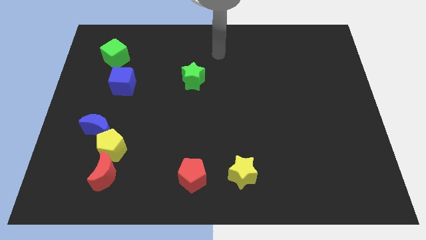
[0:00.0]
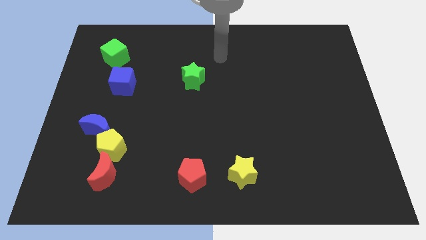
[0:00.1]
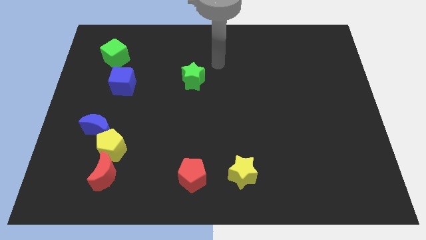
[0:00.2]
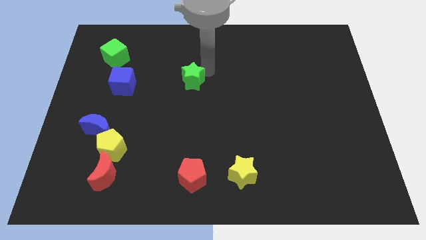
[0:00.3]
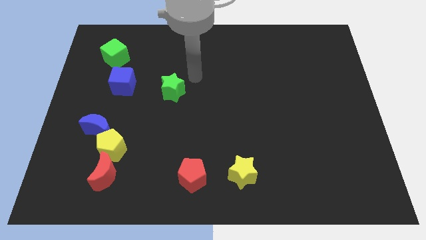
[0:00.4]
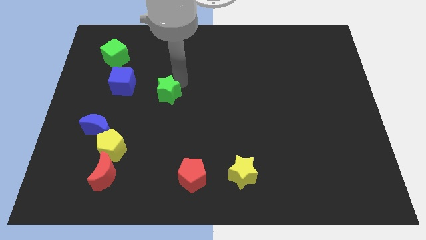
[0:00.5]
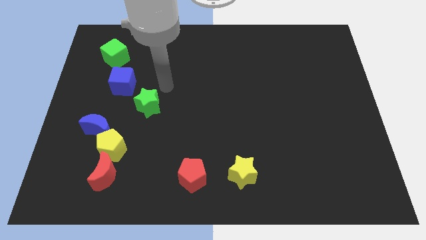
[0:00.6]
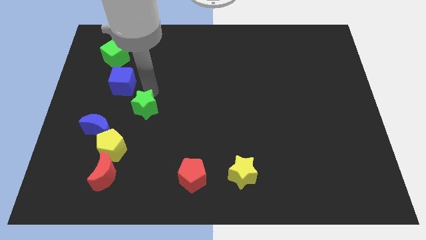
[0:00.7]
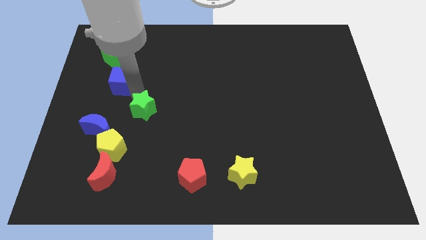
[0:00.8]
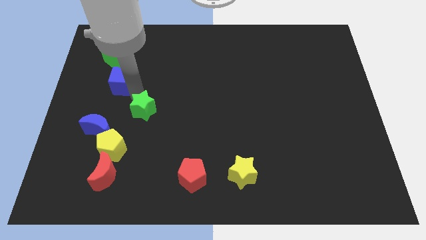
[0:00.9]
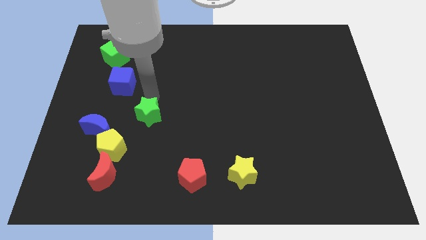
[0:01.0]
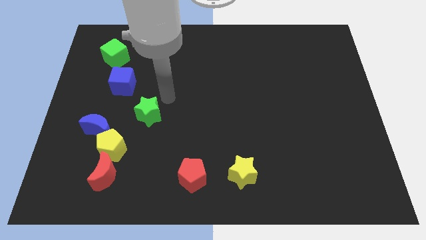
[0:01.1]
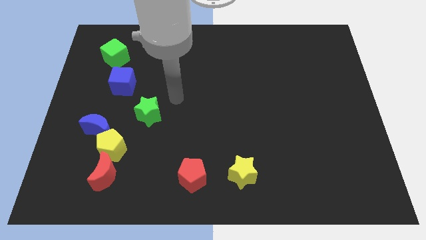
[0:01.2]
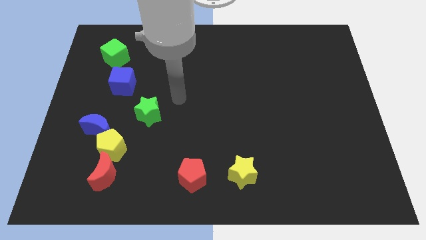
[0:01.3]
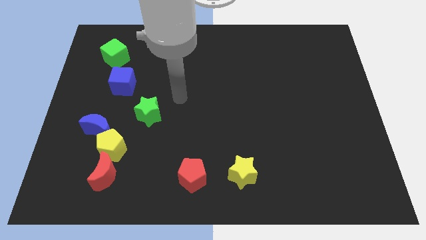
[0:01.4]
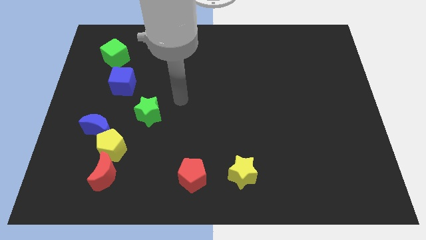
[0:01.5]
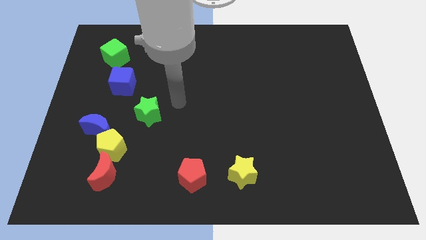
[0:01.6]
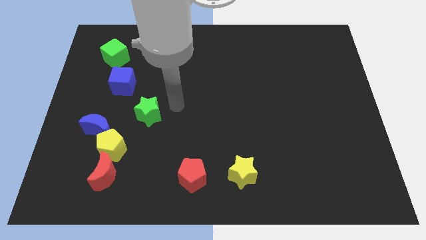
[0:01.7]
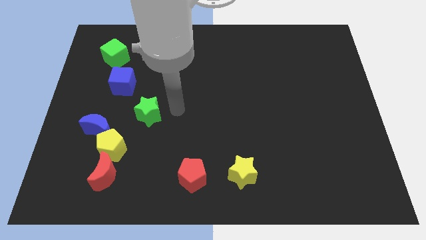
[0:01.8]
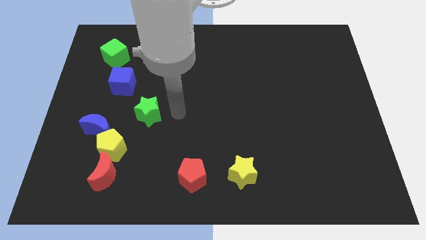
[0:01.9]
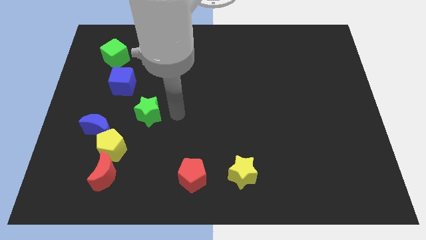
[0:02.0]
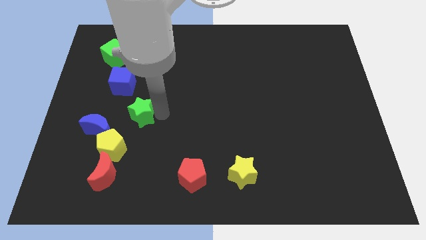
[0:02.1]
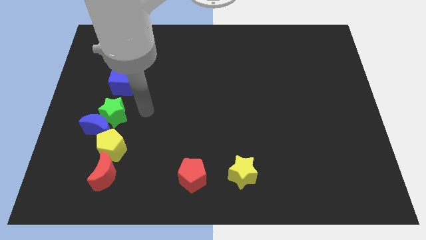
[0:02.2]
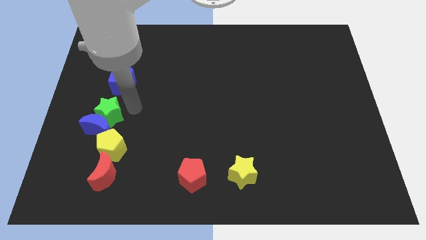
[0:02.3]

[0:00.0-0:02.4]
move the green star below the blue cube

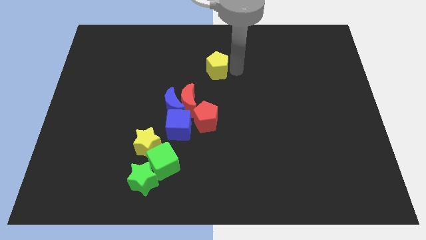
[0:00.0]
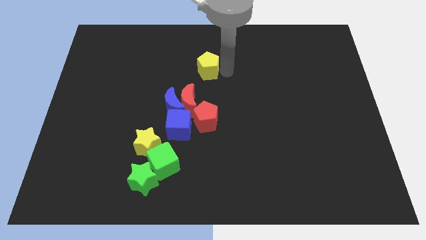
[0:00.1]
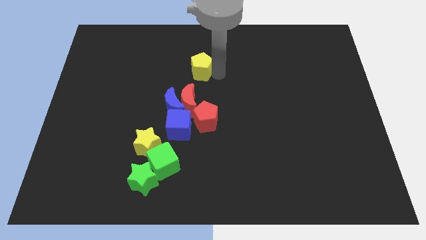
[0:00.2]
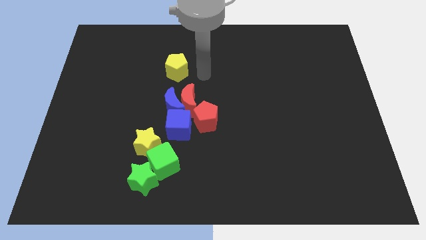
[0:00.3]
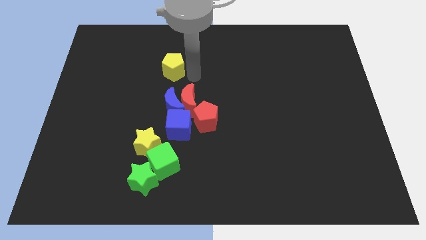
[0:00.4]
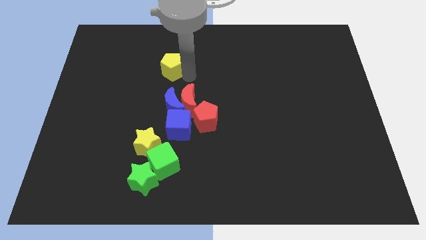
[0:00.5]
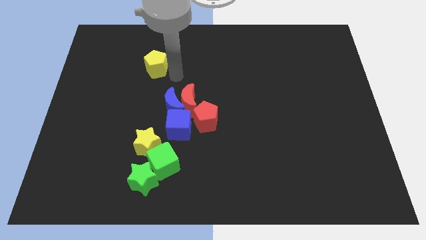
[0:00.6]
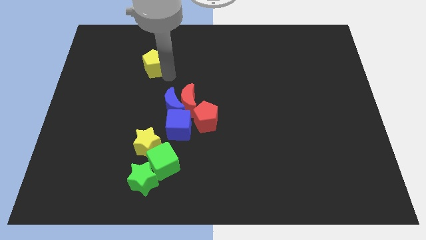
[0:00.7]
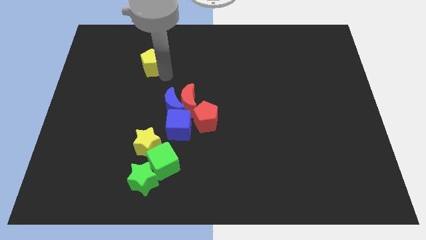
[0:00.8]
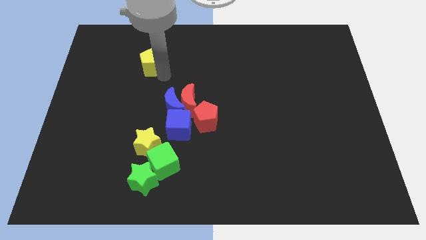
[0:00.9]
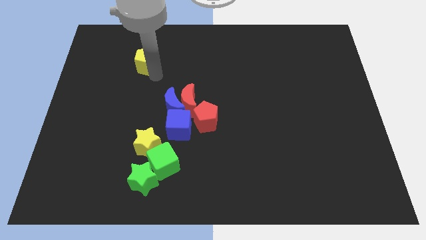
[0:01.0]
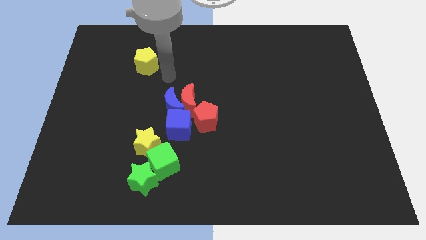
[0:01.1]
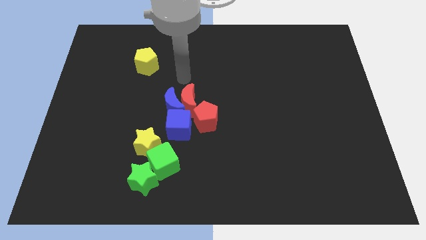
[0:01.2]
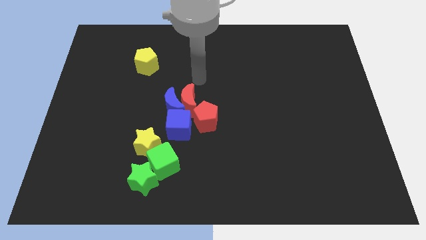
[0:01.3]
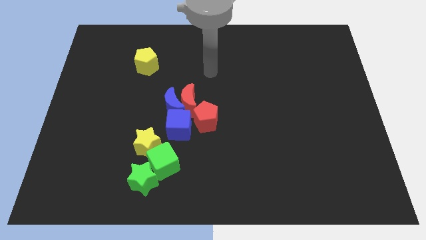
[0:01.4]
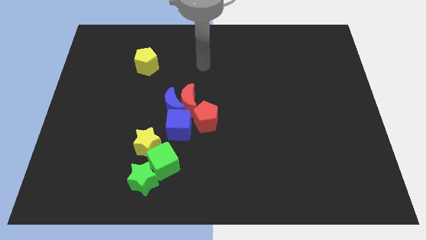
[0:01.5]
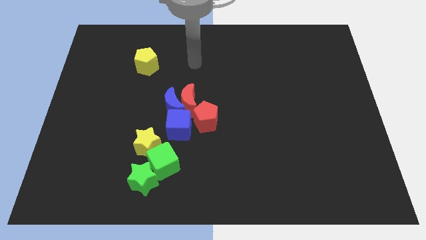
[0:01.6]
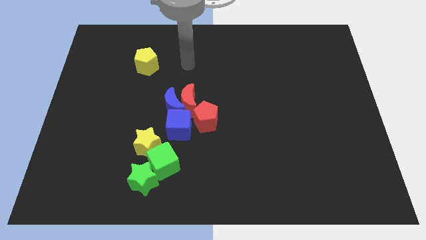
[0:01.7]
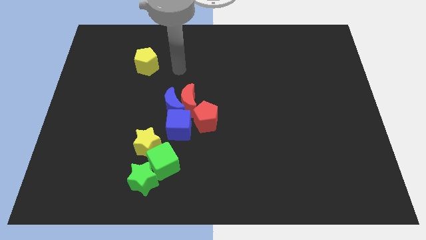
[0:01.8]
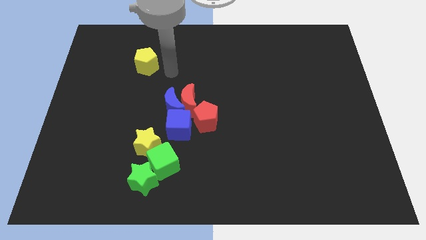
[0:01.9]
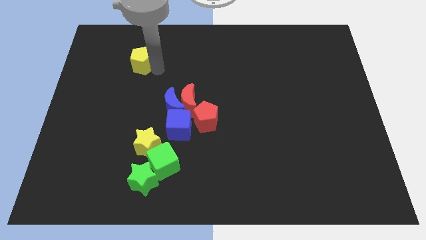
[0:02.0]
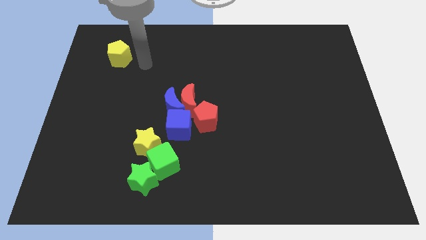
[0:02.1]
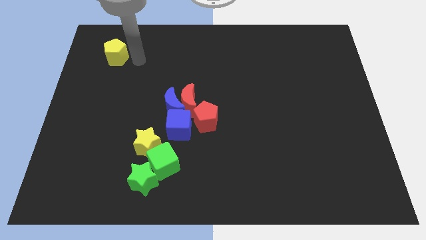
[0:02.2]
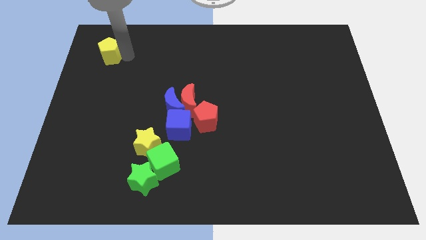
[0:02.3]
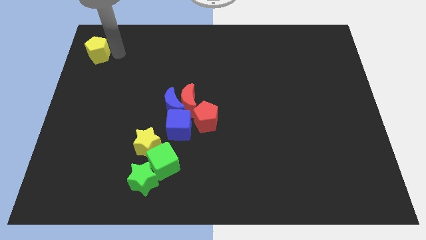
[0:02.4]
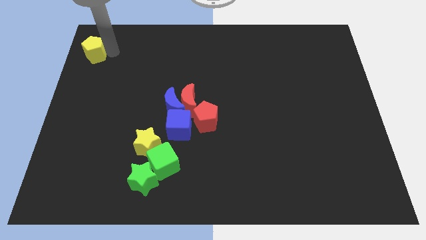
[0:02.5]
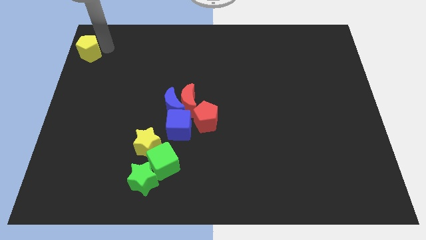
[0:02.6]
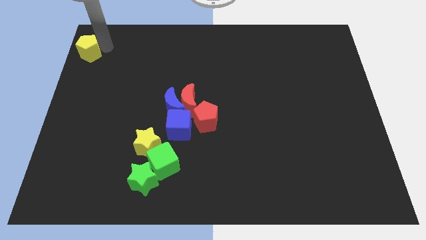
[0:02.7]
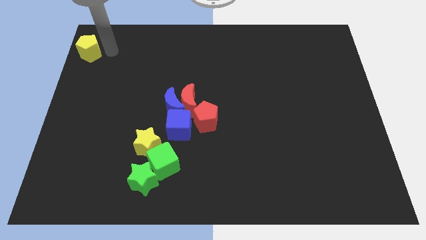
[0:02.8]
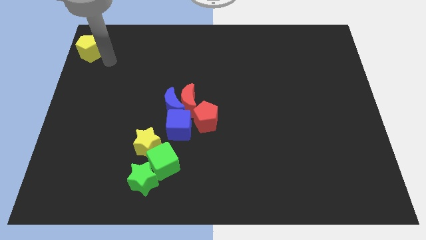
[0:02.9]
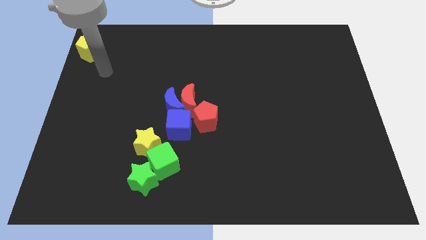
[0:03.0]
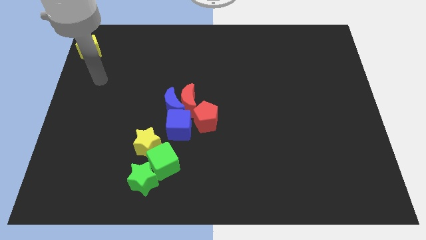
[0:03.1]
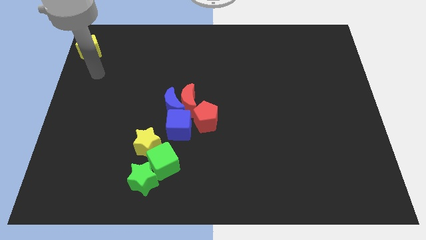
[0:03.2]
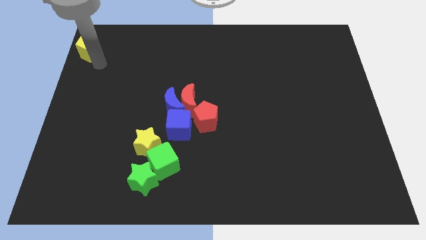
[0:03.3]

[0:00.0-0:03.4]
place yellow pentagon to the top left corner of the board

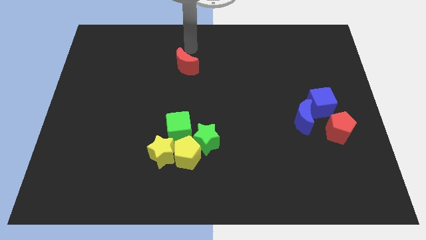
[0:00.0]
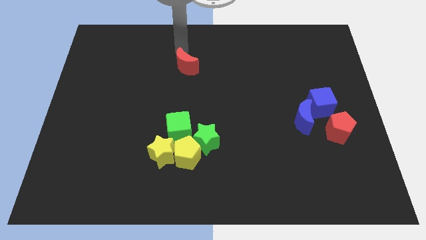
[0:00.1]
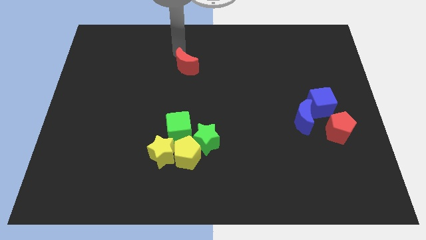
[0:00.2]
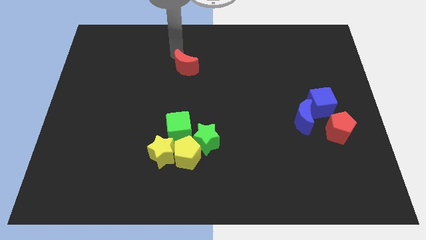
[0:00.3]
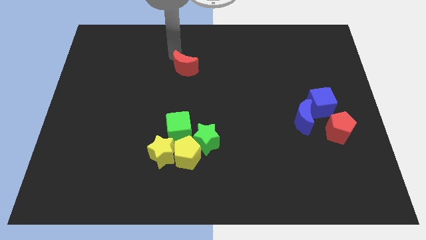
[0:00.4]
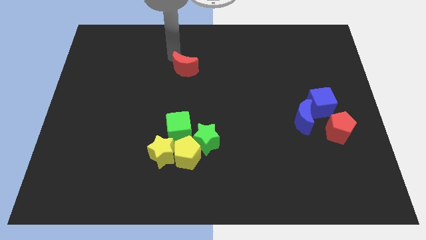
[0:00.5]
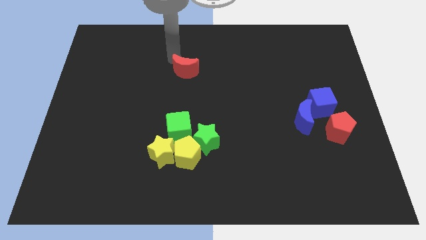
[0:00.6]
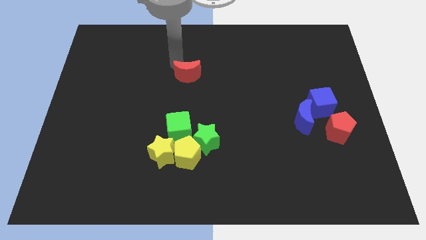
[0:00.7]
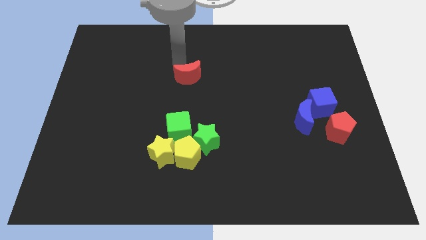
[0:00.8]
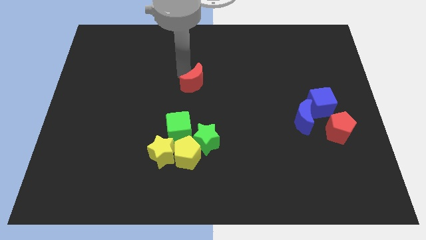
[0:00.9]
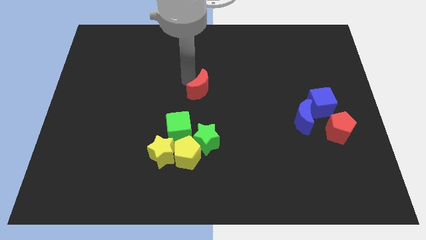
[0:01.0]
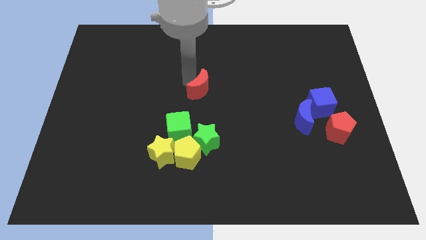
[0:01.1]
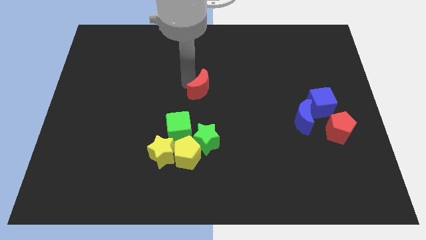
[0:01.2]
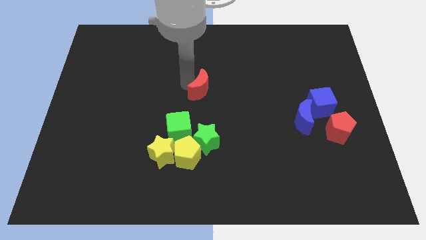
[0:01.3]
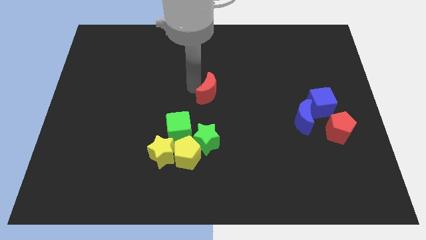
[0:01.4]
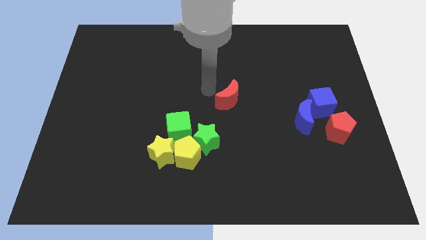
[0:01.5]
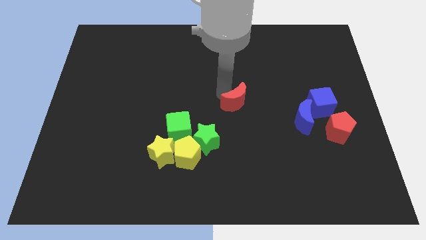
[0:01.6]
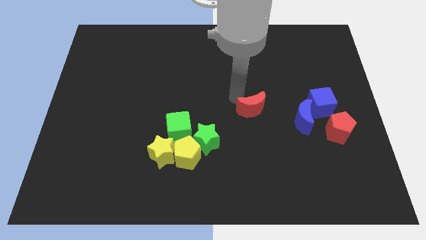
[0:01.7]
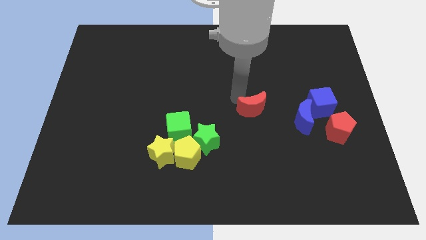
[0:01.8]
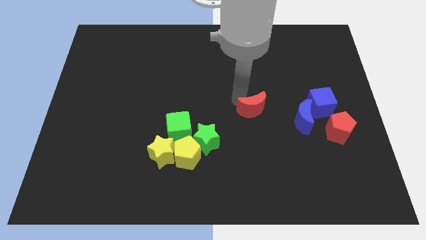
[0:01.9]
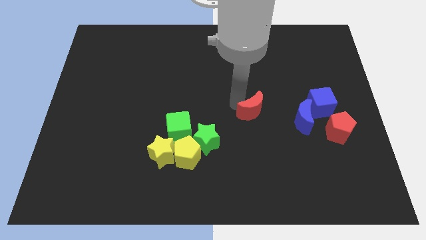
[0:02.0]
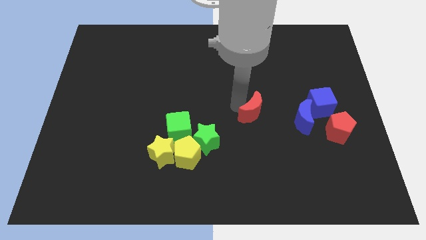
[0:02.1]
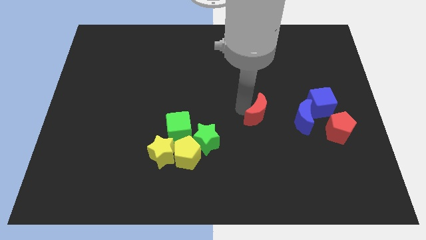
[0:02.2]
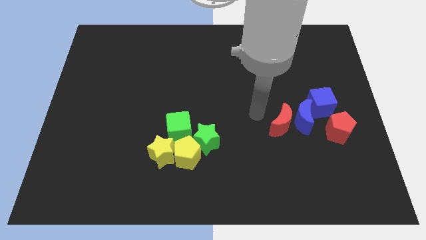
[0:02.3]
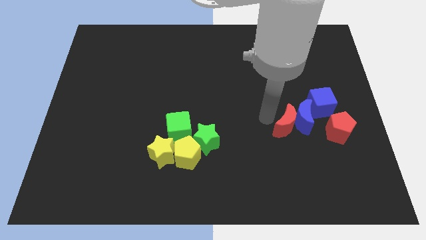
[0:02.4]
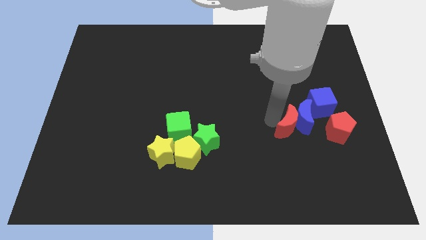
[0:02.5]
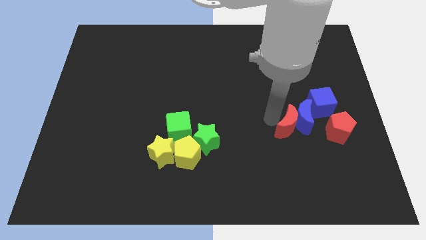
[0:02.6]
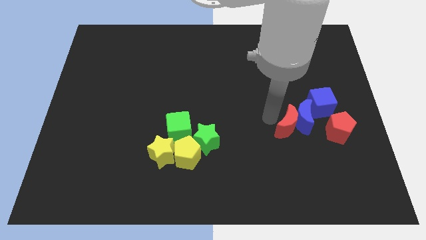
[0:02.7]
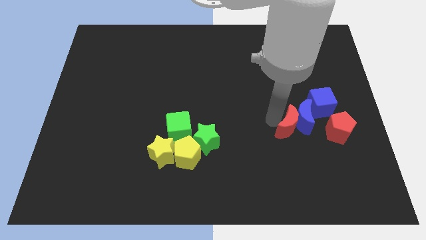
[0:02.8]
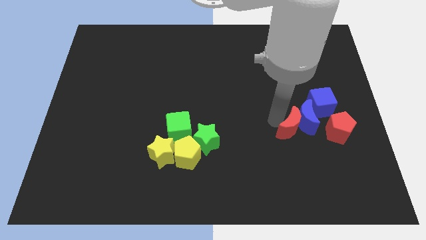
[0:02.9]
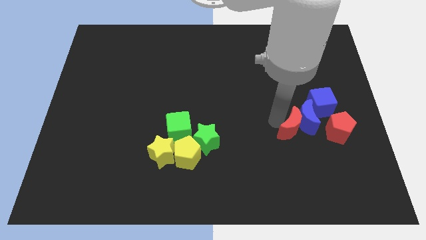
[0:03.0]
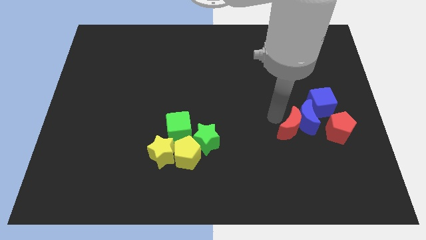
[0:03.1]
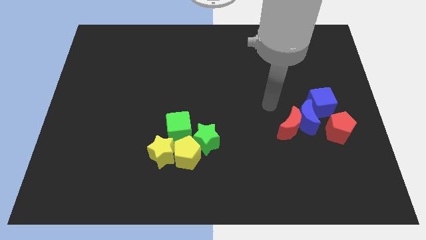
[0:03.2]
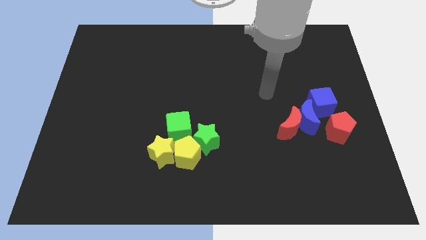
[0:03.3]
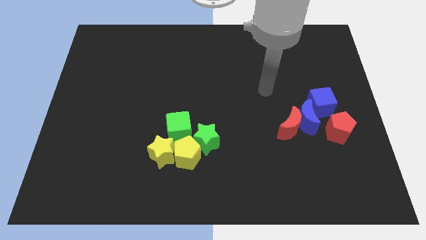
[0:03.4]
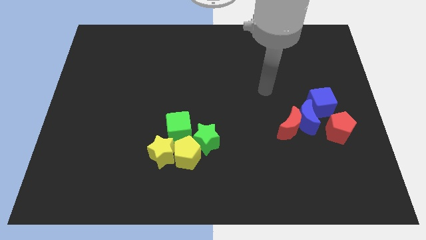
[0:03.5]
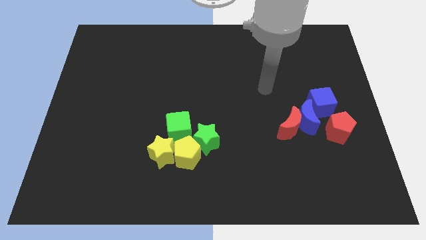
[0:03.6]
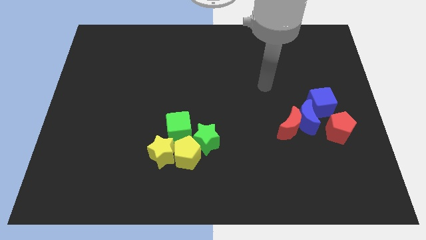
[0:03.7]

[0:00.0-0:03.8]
move red moon in to blue cube
